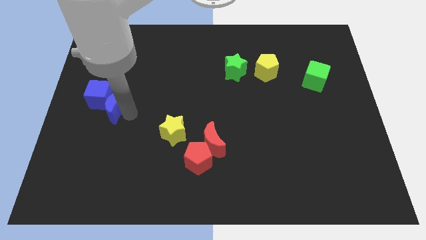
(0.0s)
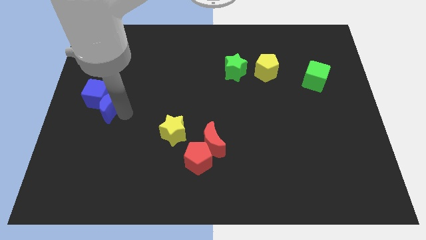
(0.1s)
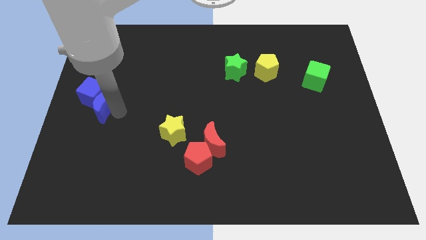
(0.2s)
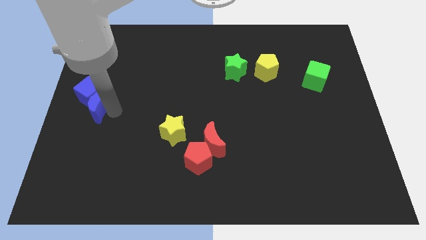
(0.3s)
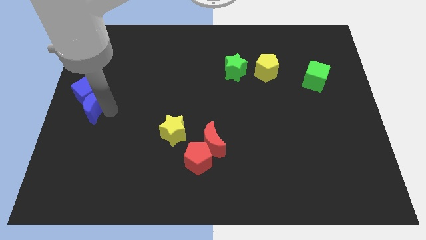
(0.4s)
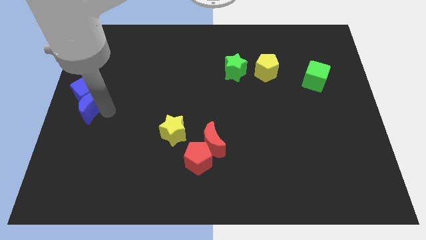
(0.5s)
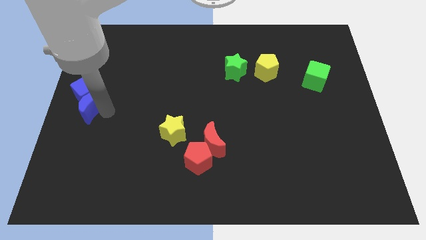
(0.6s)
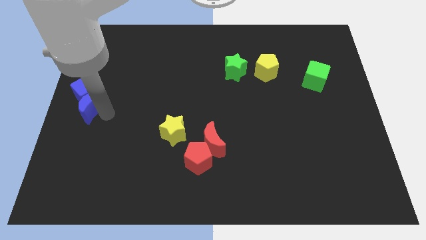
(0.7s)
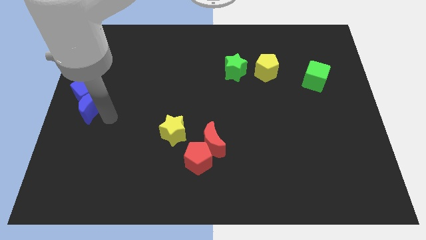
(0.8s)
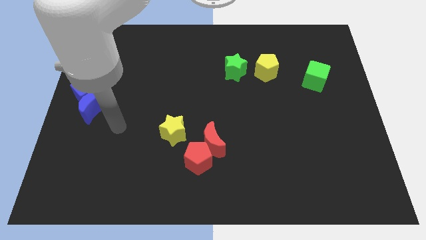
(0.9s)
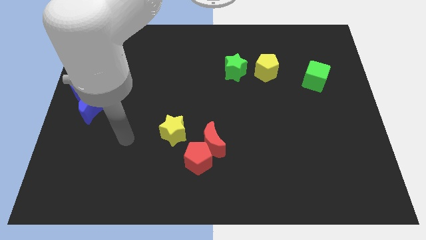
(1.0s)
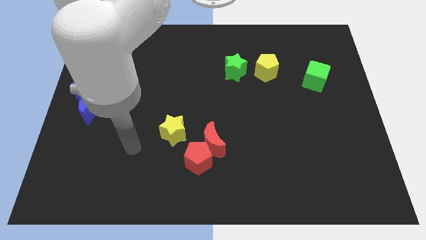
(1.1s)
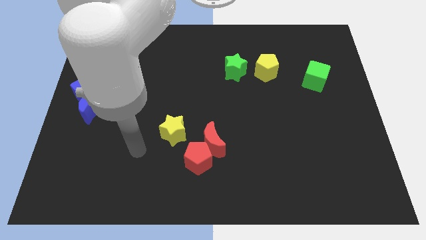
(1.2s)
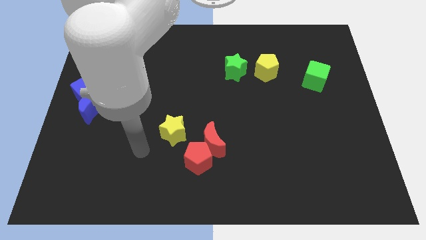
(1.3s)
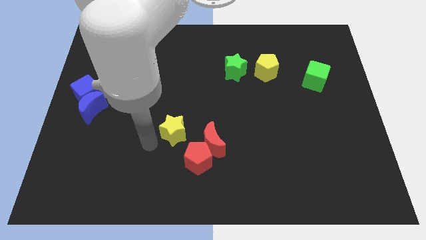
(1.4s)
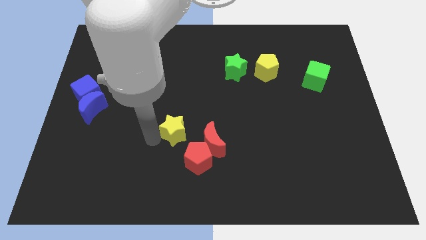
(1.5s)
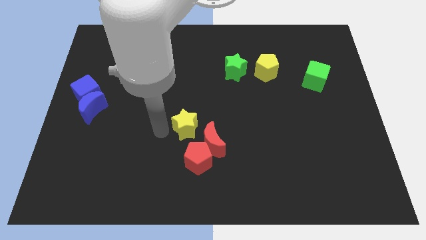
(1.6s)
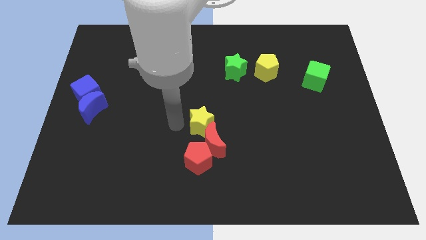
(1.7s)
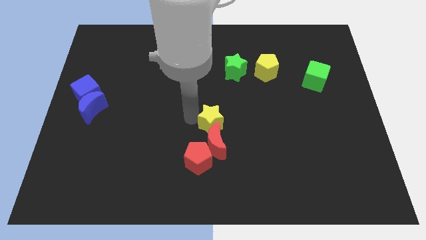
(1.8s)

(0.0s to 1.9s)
push the blue crescent into blue cube

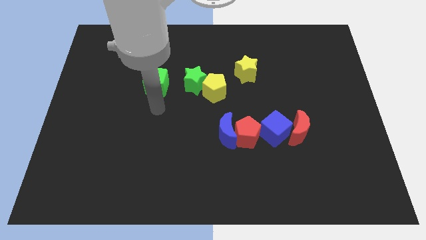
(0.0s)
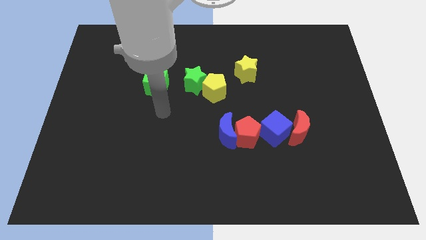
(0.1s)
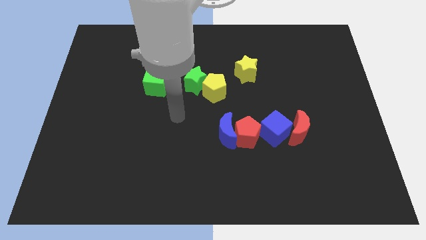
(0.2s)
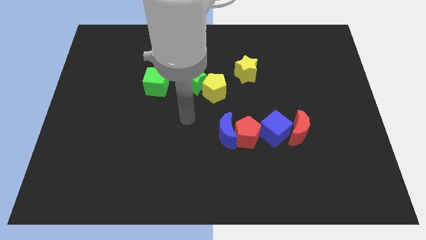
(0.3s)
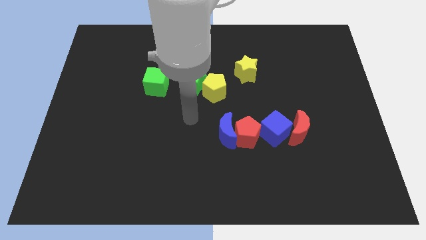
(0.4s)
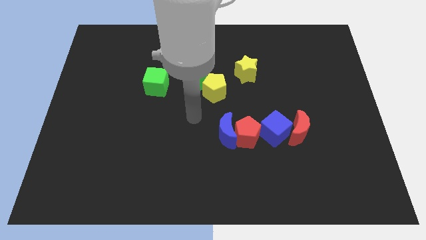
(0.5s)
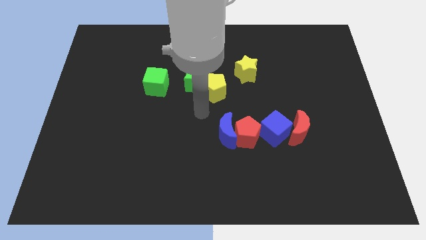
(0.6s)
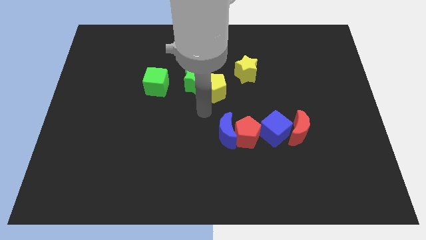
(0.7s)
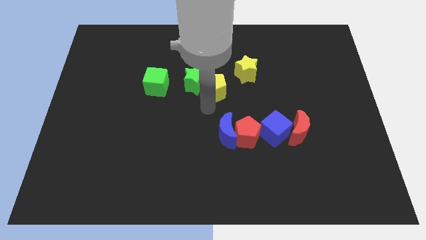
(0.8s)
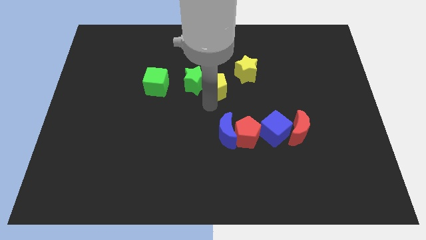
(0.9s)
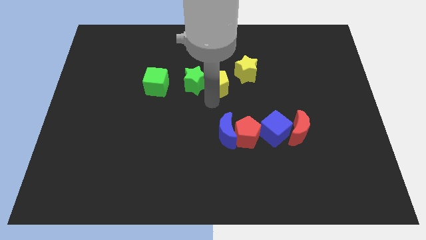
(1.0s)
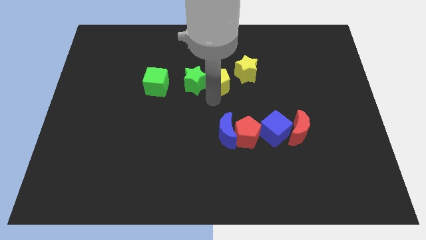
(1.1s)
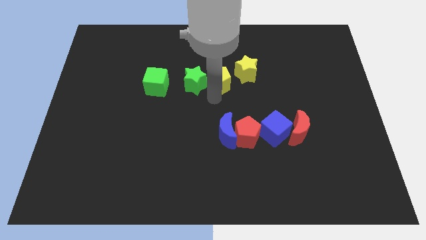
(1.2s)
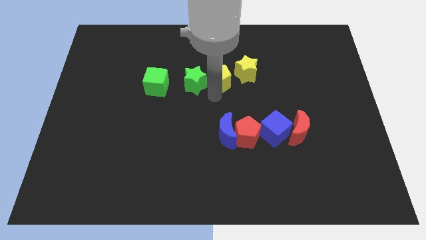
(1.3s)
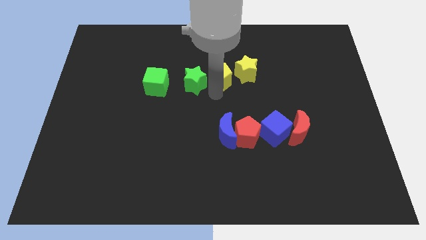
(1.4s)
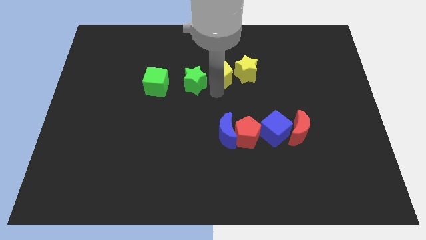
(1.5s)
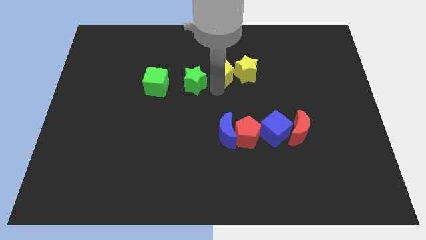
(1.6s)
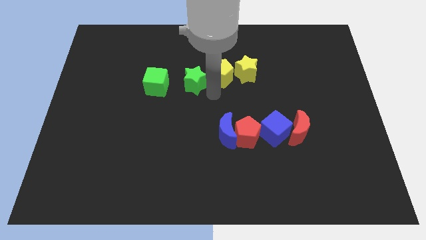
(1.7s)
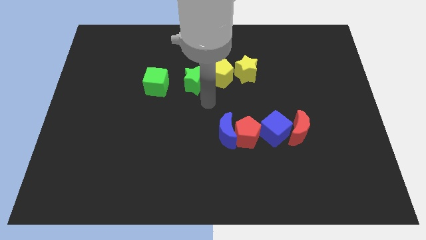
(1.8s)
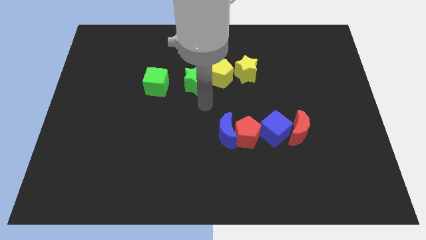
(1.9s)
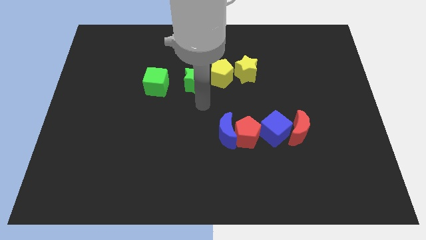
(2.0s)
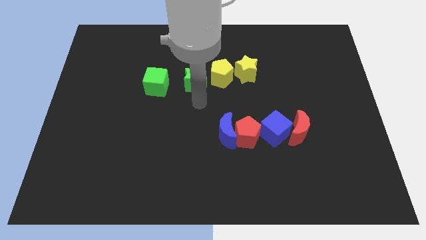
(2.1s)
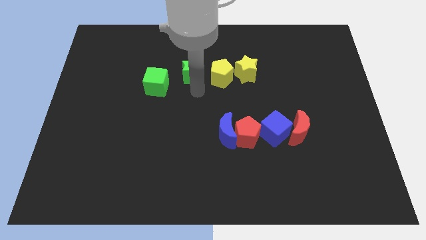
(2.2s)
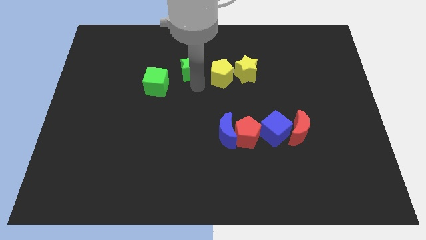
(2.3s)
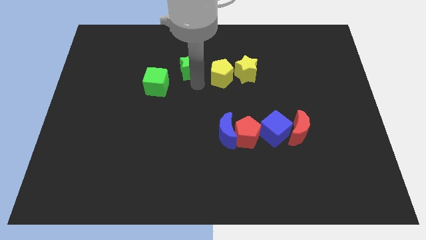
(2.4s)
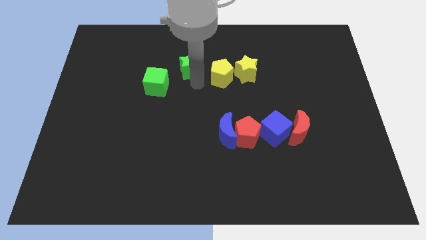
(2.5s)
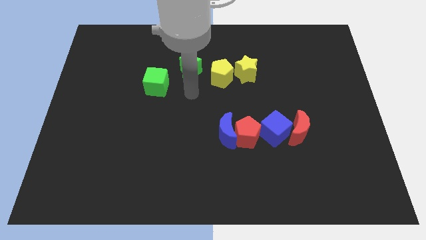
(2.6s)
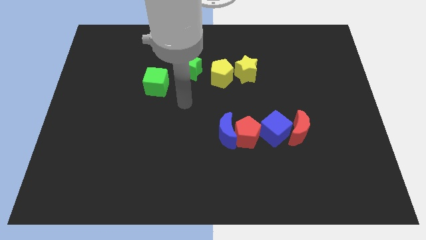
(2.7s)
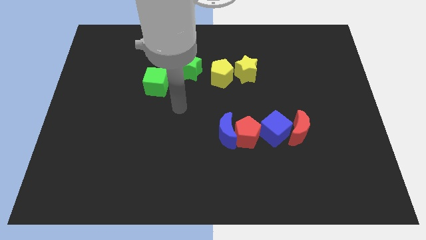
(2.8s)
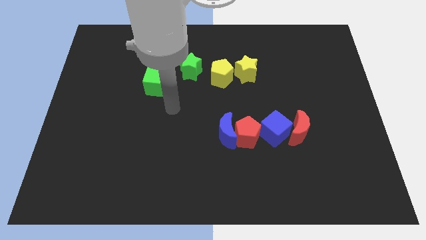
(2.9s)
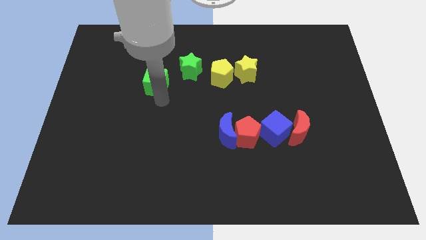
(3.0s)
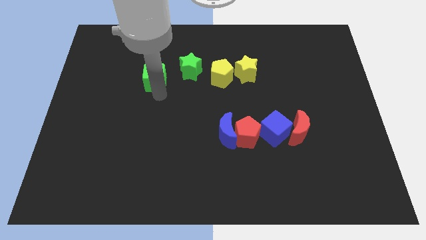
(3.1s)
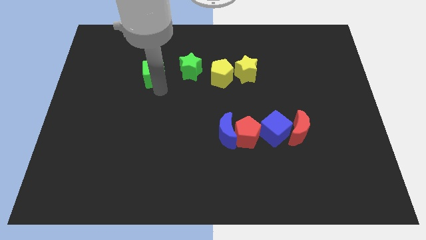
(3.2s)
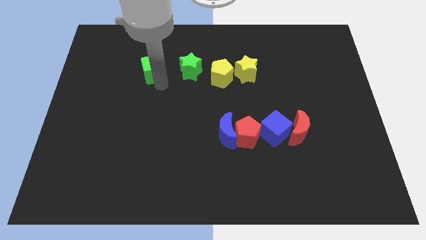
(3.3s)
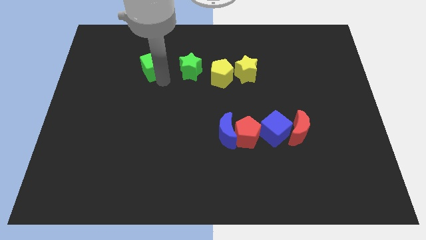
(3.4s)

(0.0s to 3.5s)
make a horizontal line out of green and the yellow blocks

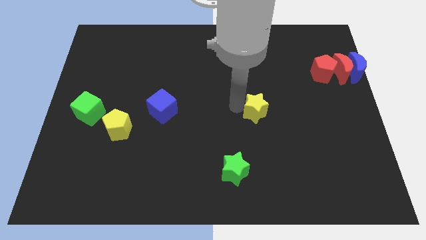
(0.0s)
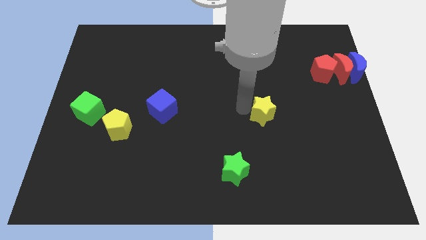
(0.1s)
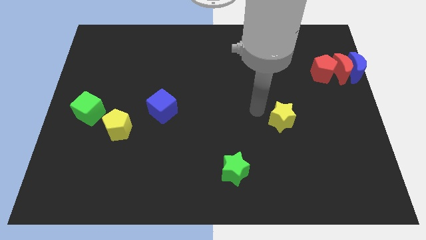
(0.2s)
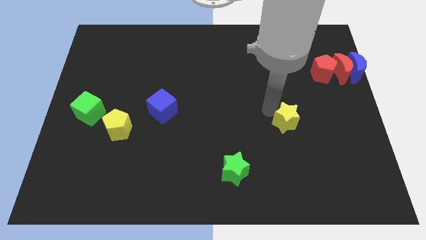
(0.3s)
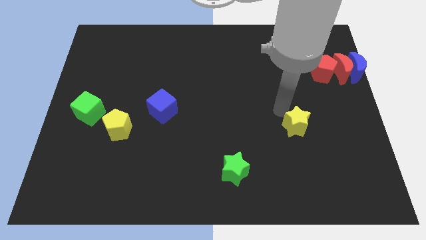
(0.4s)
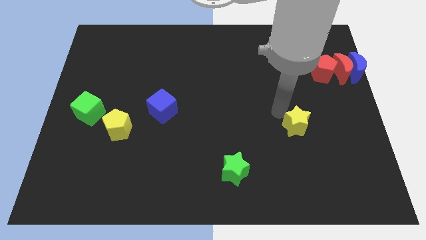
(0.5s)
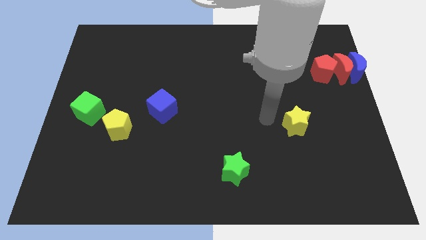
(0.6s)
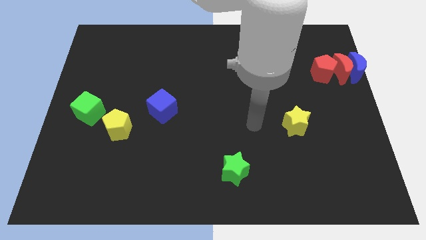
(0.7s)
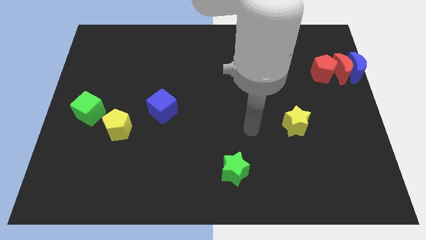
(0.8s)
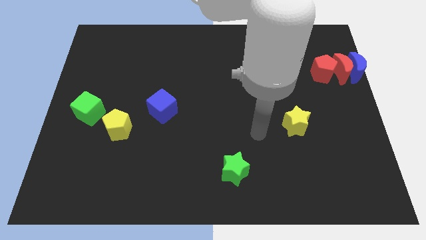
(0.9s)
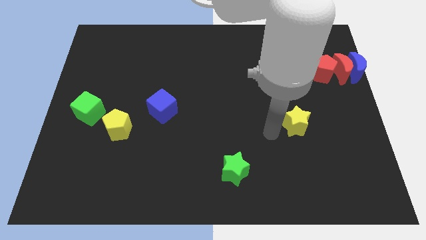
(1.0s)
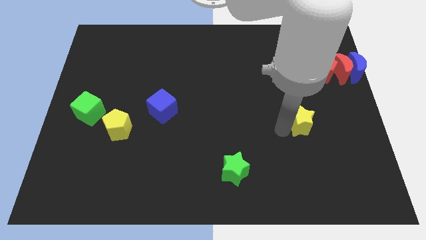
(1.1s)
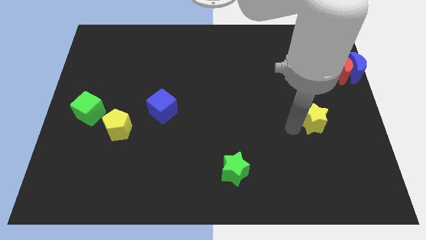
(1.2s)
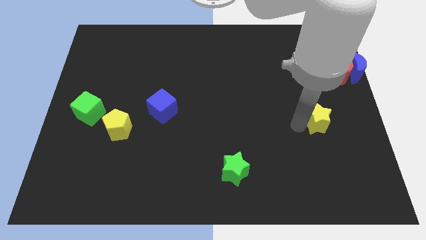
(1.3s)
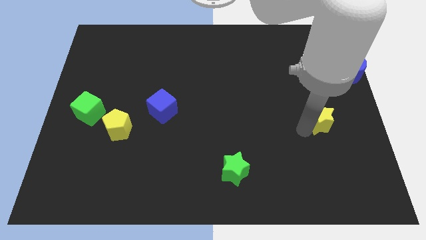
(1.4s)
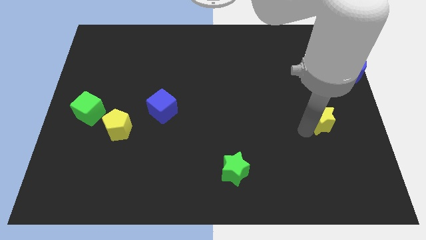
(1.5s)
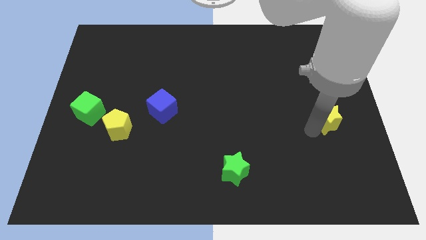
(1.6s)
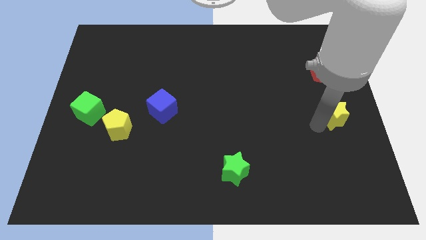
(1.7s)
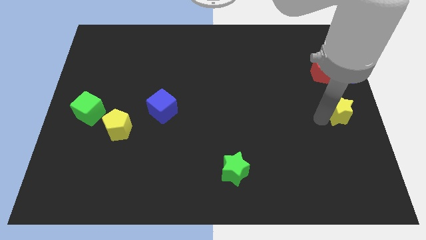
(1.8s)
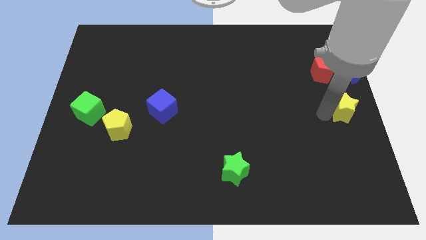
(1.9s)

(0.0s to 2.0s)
push yellow star to the right side

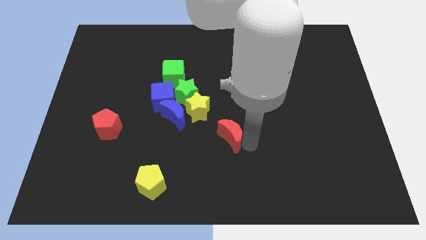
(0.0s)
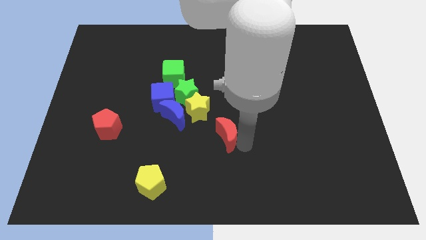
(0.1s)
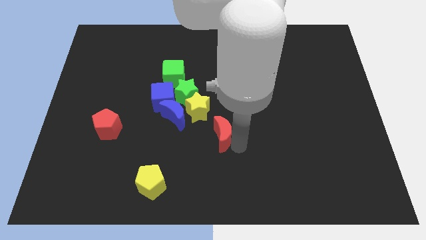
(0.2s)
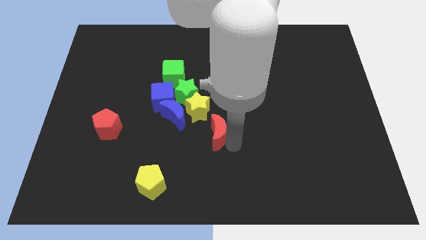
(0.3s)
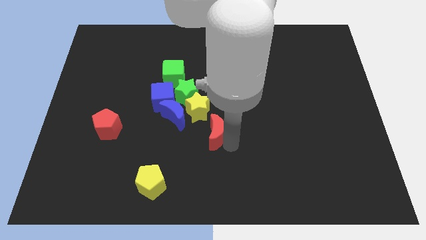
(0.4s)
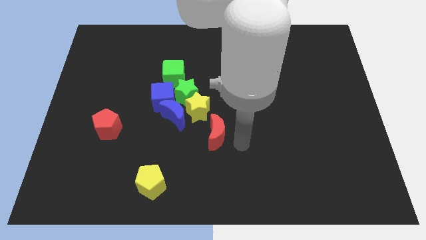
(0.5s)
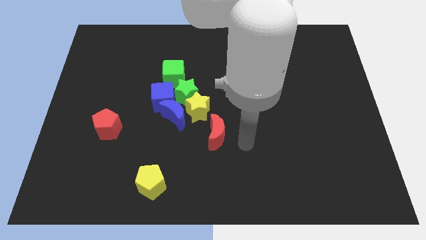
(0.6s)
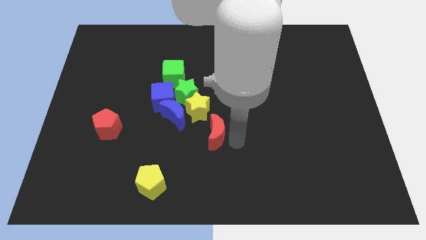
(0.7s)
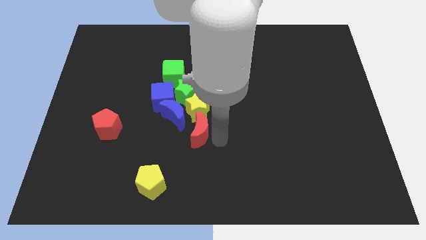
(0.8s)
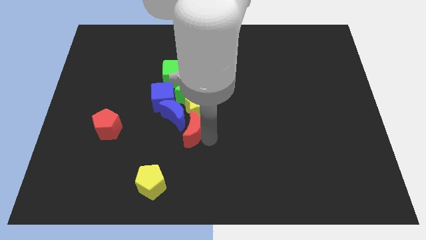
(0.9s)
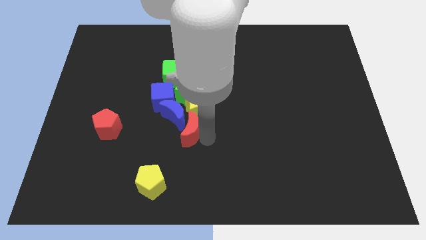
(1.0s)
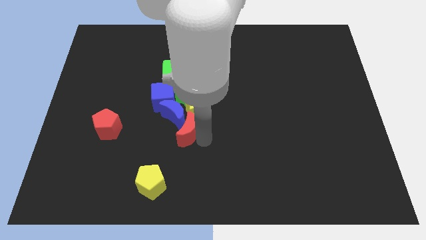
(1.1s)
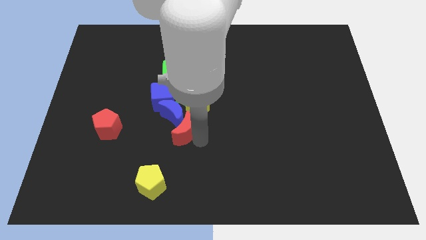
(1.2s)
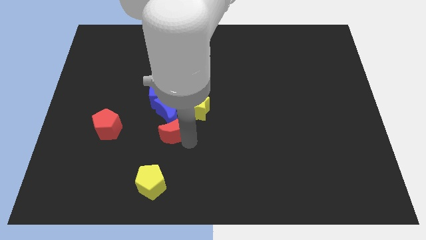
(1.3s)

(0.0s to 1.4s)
place the red moon to the bottom of yellow star

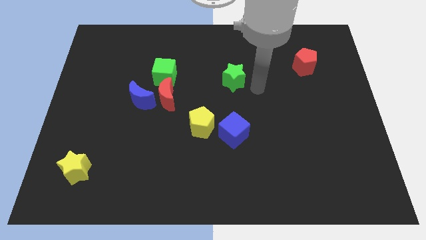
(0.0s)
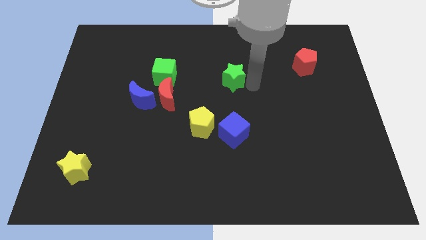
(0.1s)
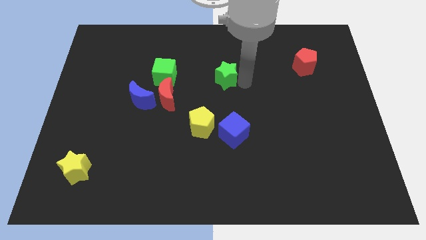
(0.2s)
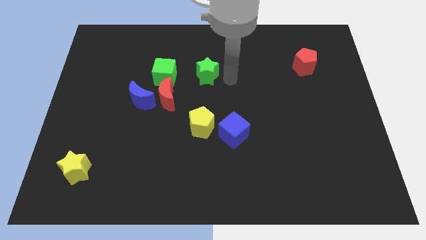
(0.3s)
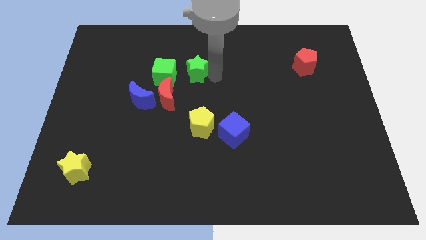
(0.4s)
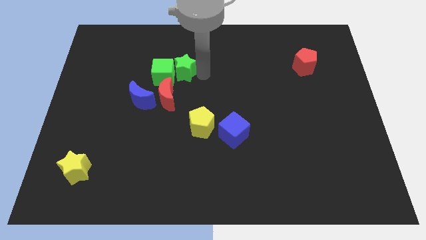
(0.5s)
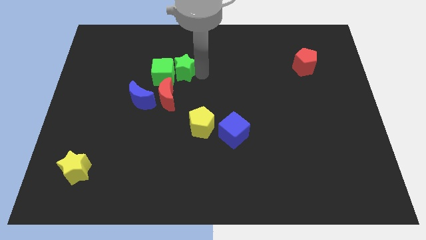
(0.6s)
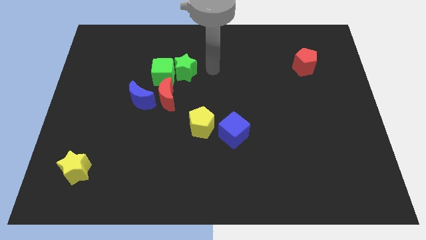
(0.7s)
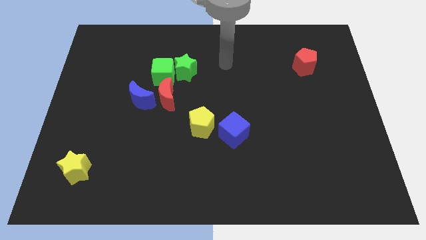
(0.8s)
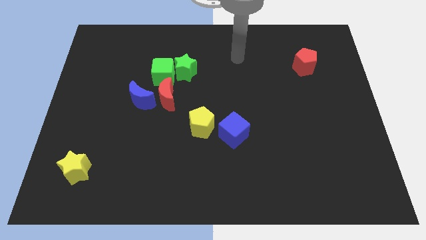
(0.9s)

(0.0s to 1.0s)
move the green star into the green cube
